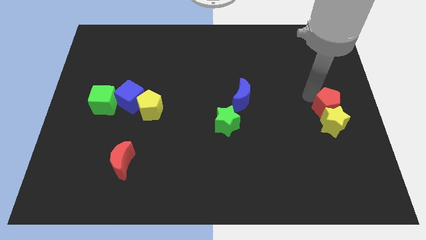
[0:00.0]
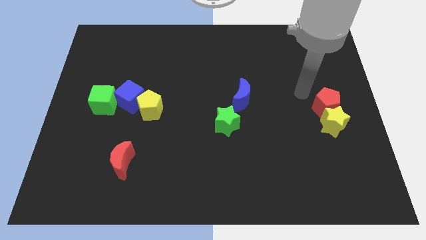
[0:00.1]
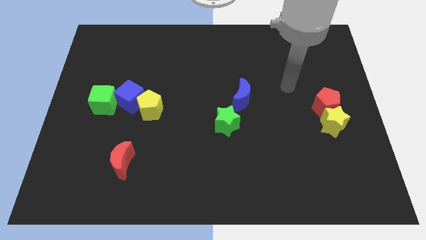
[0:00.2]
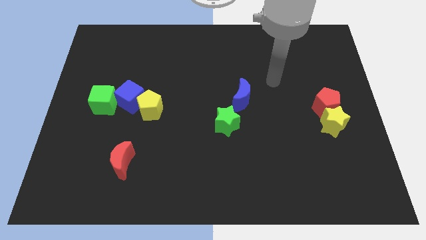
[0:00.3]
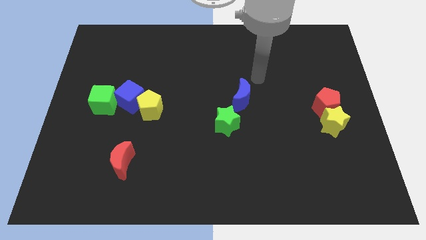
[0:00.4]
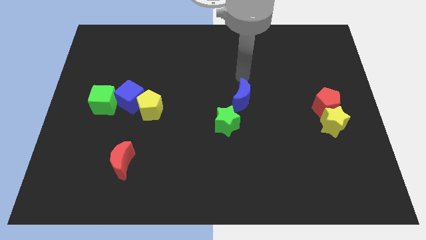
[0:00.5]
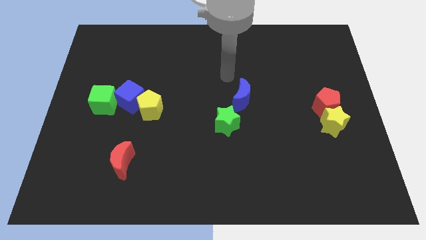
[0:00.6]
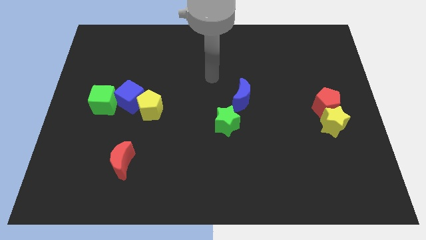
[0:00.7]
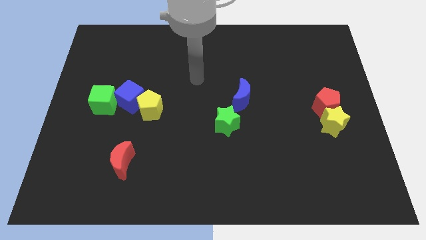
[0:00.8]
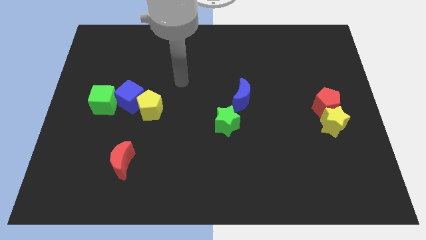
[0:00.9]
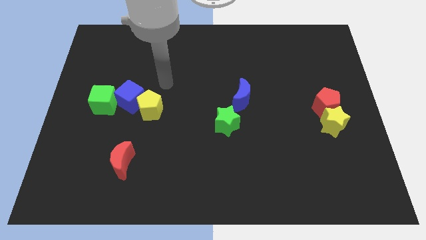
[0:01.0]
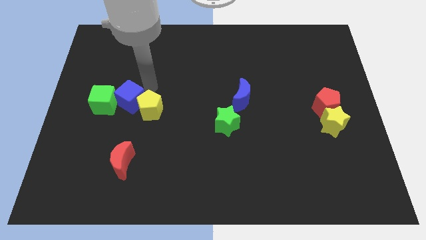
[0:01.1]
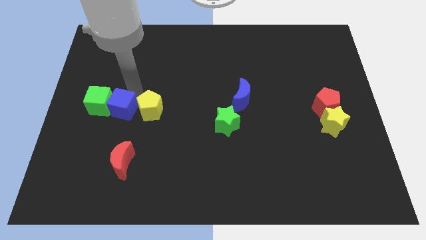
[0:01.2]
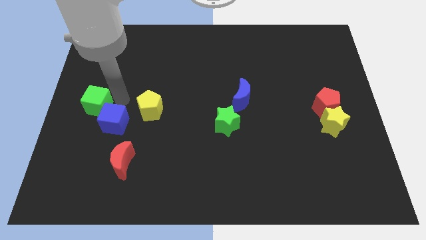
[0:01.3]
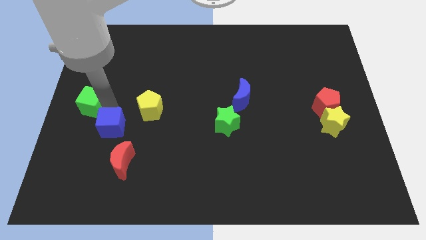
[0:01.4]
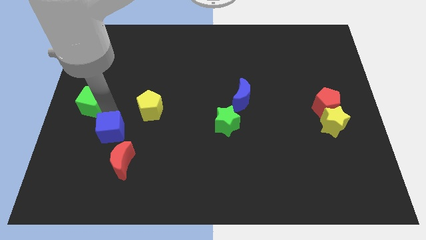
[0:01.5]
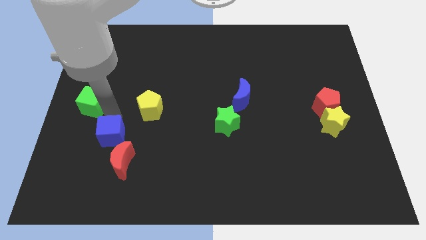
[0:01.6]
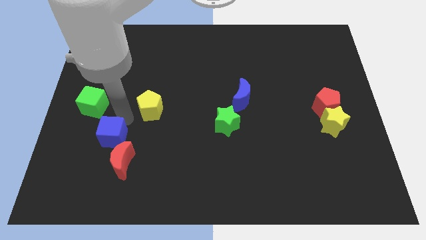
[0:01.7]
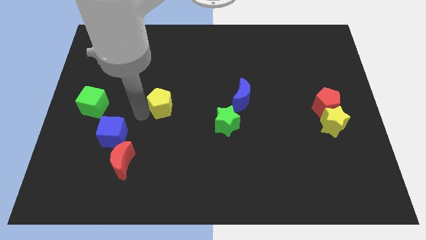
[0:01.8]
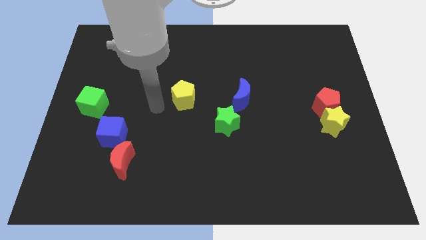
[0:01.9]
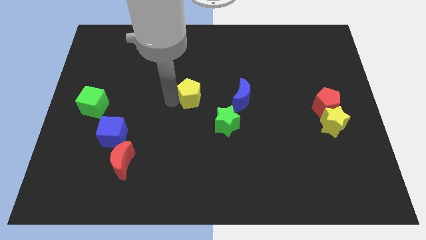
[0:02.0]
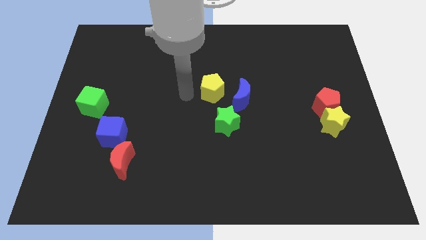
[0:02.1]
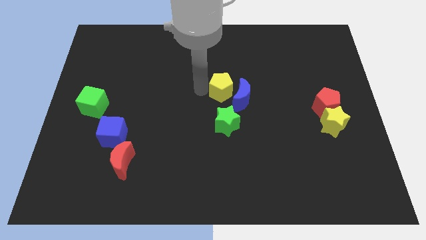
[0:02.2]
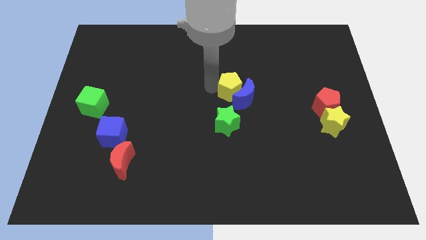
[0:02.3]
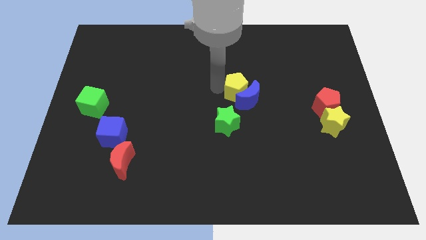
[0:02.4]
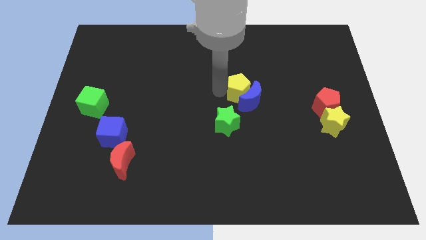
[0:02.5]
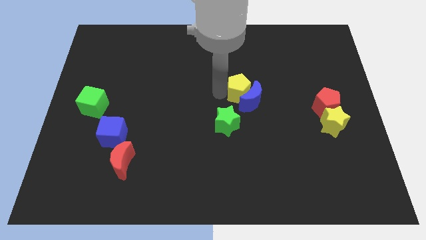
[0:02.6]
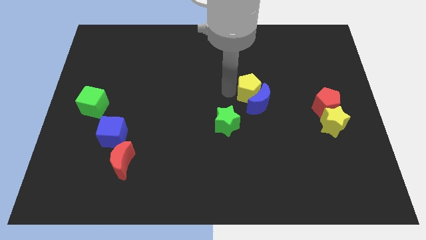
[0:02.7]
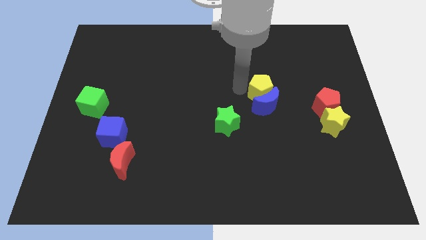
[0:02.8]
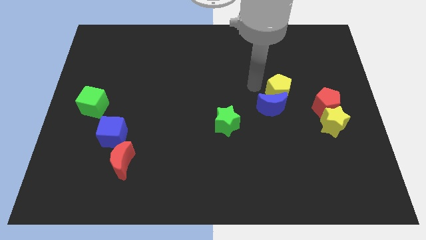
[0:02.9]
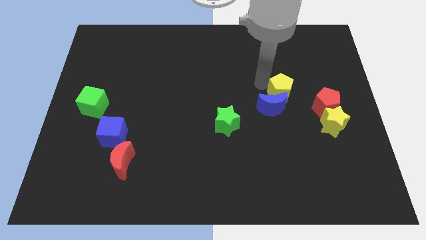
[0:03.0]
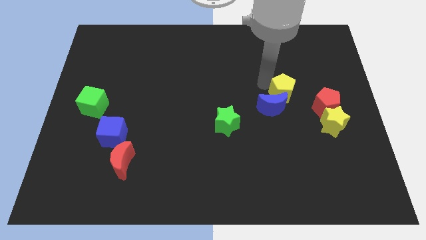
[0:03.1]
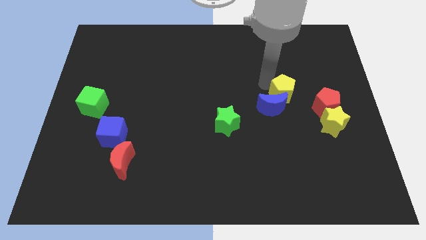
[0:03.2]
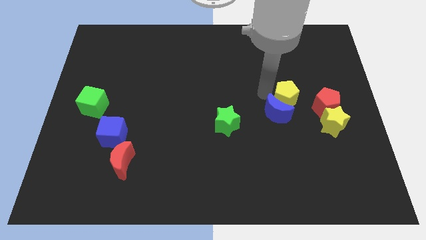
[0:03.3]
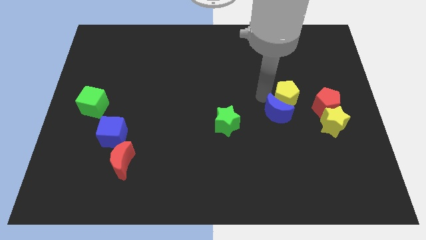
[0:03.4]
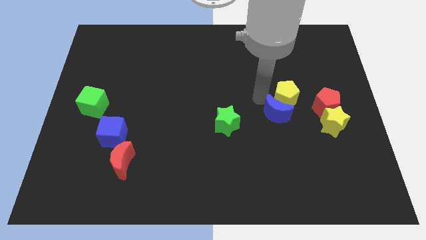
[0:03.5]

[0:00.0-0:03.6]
push the yellow pentagon and blue moon together at the left of the red pentagon

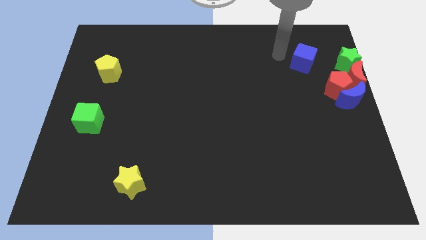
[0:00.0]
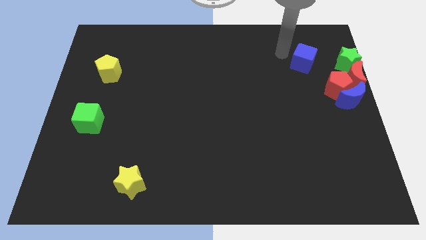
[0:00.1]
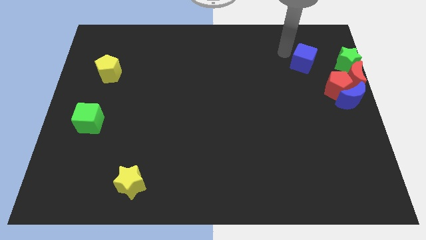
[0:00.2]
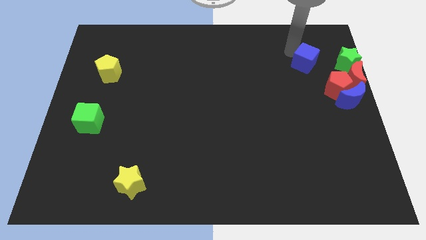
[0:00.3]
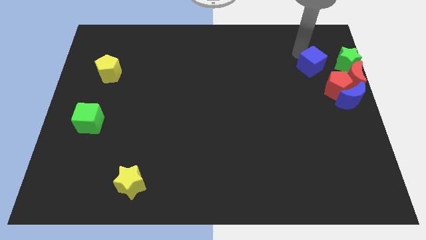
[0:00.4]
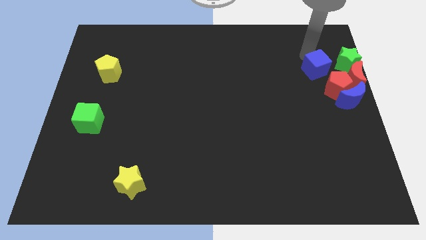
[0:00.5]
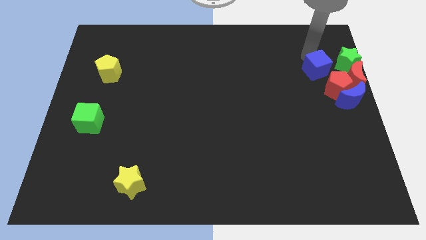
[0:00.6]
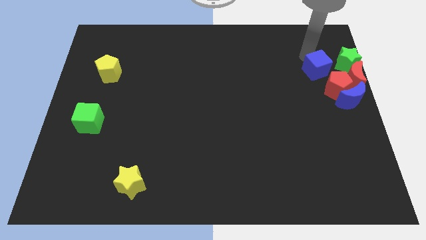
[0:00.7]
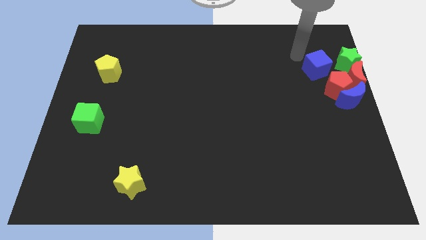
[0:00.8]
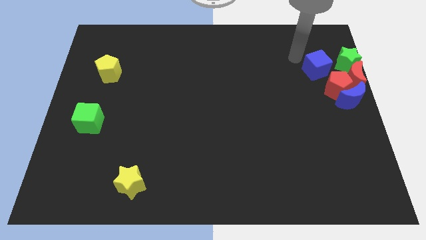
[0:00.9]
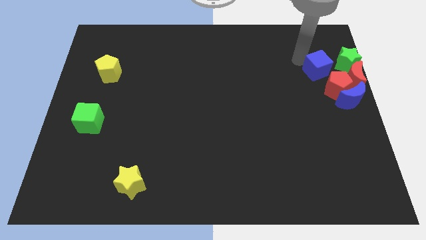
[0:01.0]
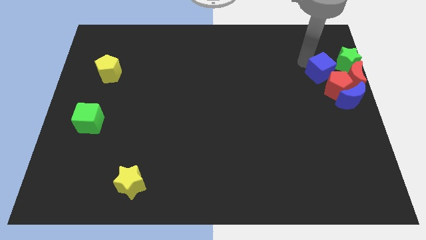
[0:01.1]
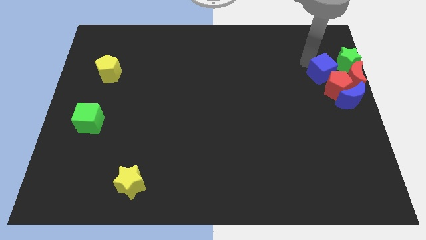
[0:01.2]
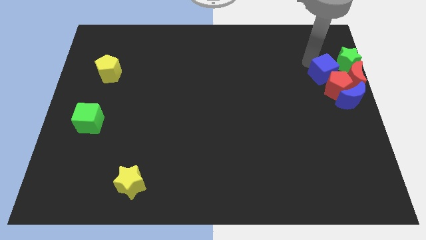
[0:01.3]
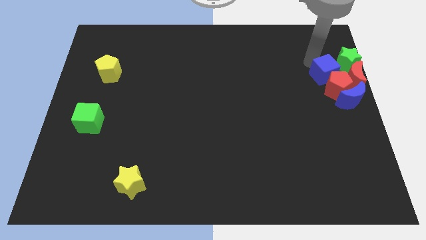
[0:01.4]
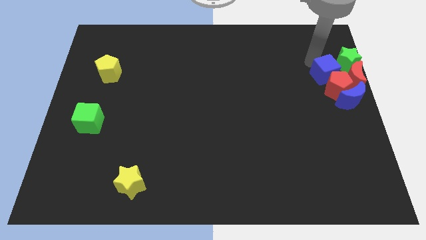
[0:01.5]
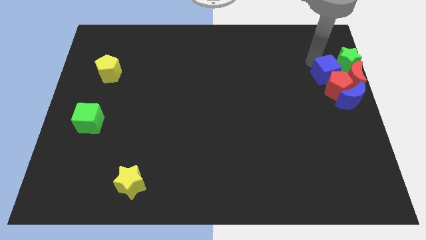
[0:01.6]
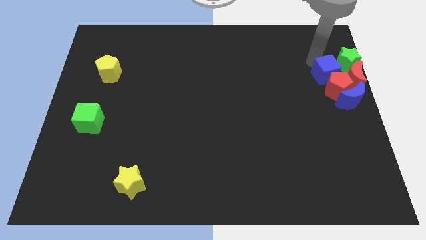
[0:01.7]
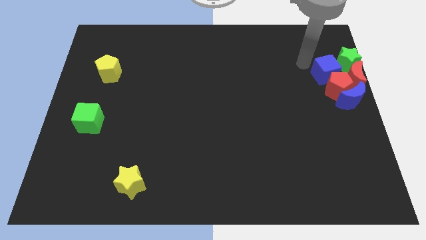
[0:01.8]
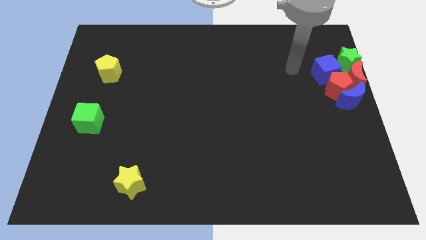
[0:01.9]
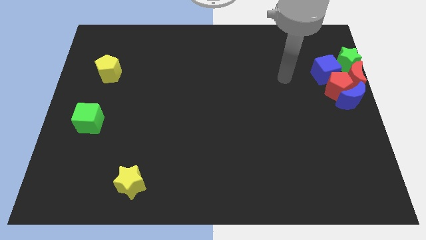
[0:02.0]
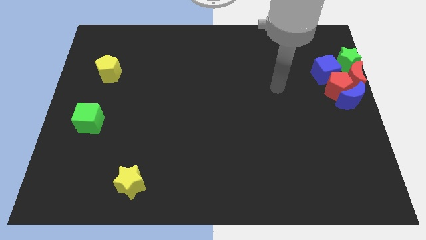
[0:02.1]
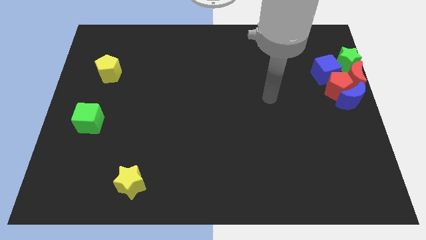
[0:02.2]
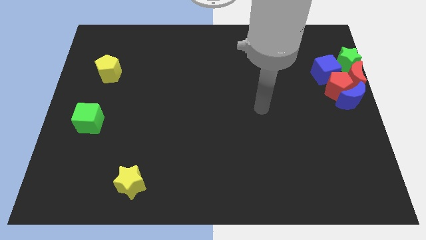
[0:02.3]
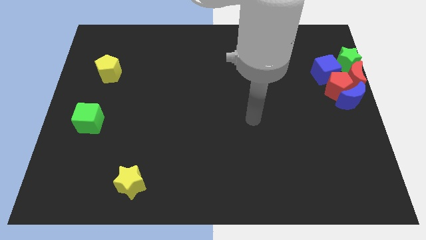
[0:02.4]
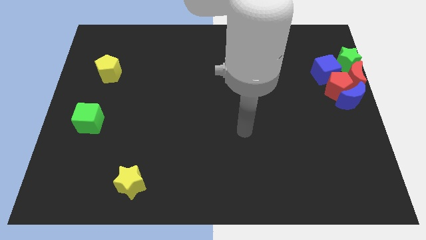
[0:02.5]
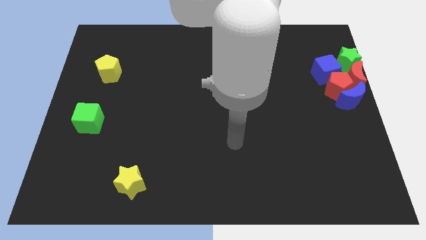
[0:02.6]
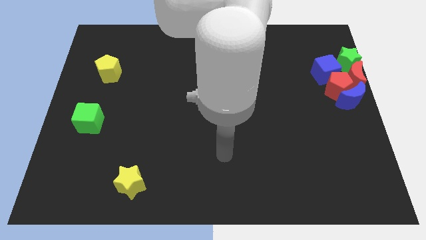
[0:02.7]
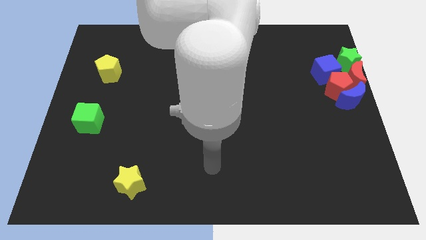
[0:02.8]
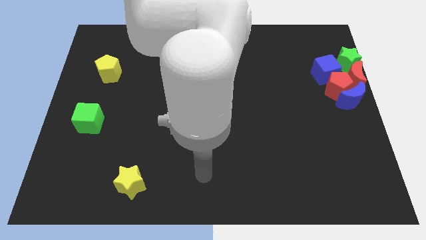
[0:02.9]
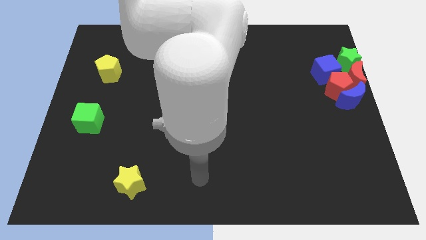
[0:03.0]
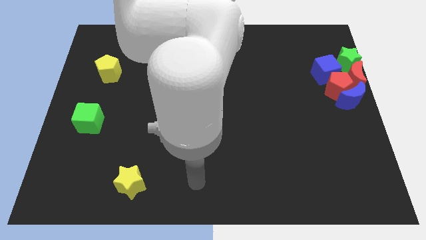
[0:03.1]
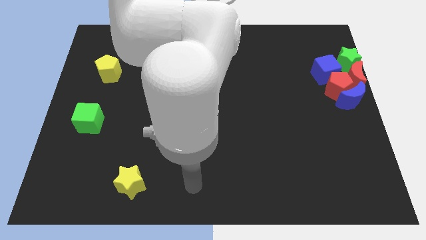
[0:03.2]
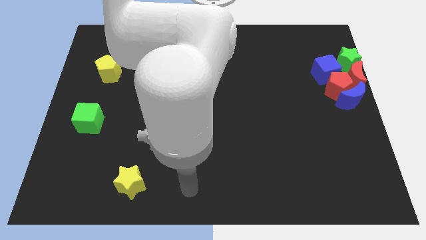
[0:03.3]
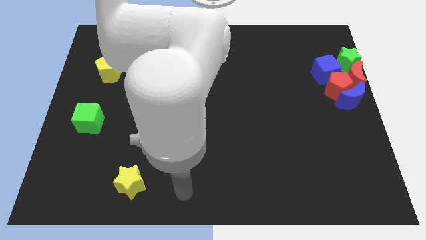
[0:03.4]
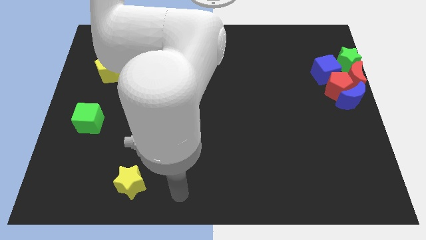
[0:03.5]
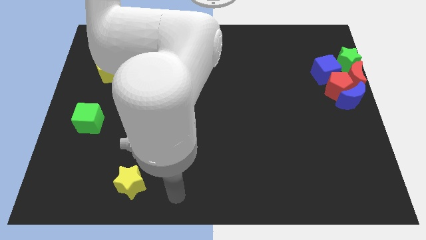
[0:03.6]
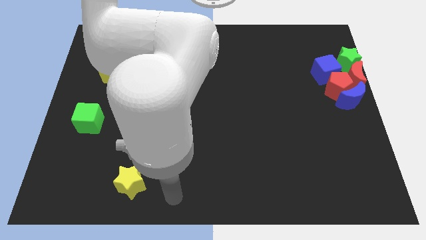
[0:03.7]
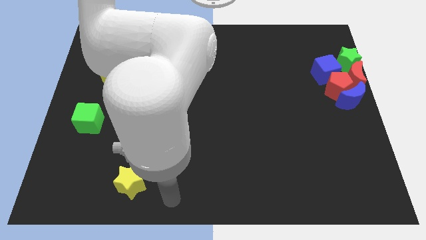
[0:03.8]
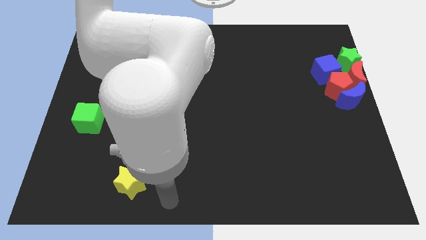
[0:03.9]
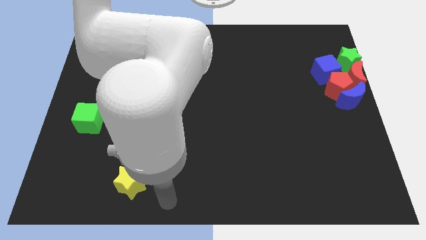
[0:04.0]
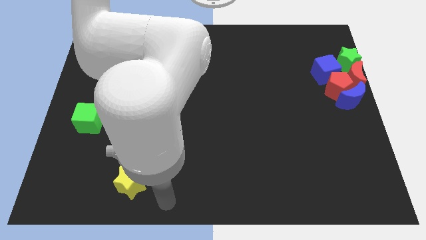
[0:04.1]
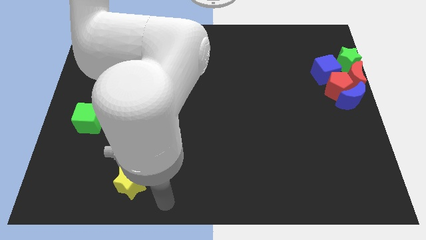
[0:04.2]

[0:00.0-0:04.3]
push the blue cube into the red pentagon

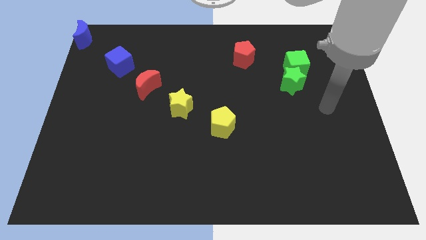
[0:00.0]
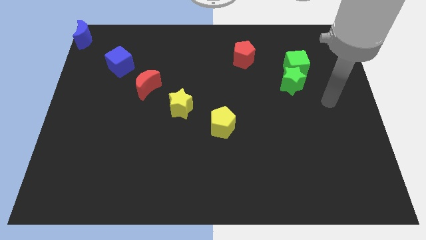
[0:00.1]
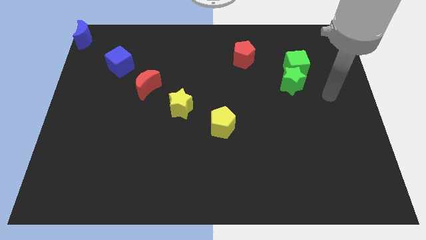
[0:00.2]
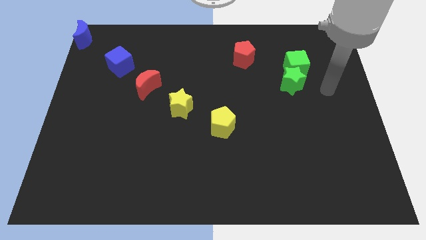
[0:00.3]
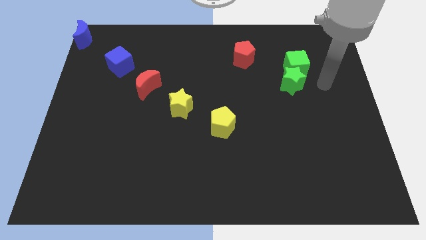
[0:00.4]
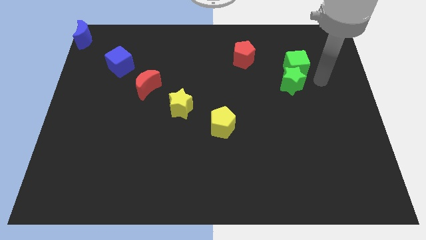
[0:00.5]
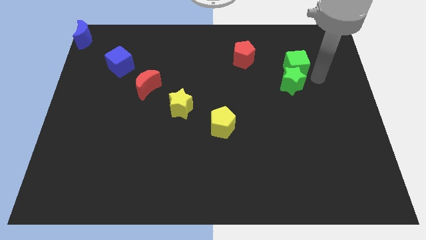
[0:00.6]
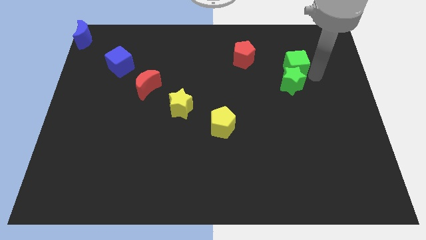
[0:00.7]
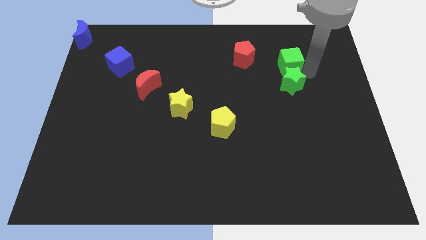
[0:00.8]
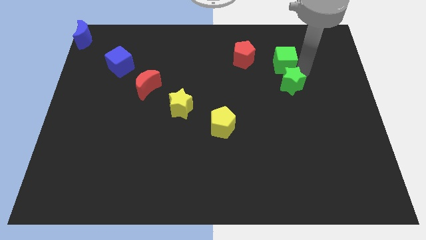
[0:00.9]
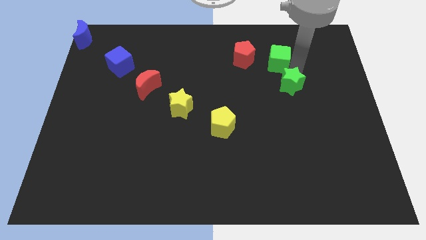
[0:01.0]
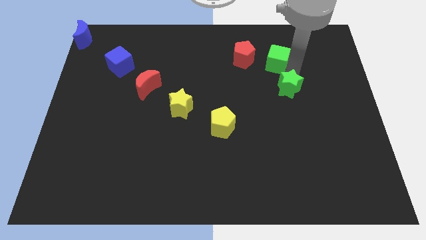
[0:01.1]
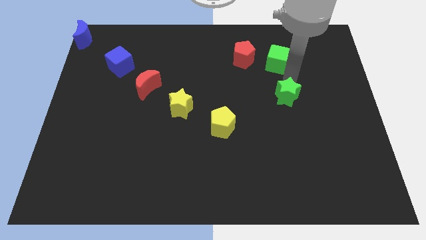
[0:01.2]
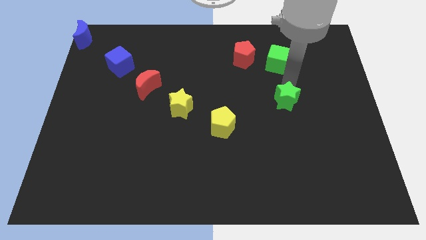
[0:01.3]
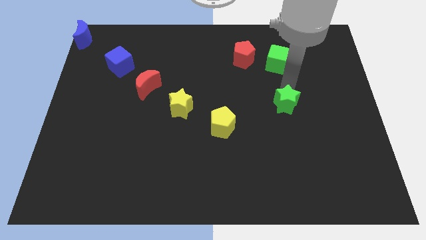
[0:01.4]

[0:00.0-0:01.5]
separate the green cube and green star
